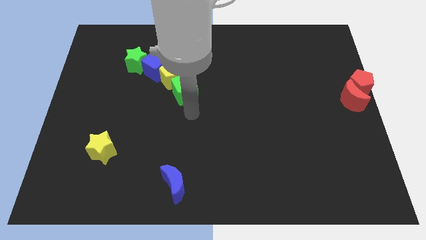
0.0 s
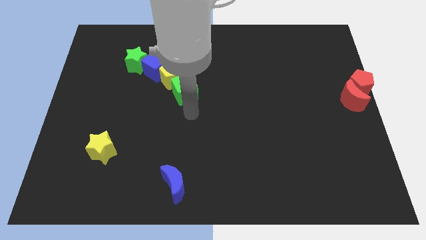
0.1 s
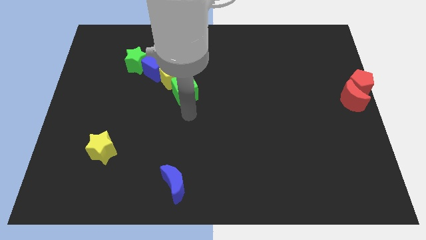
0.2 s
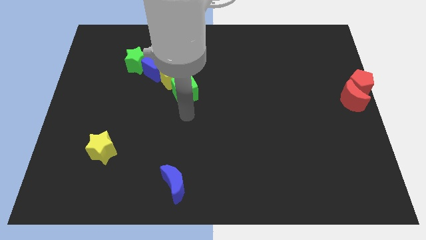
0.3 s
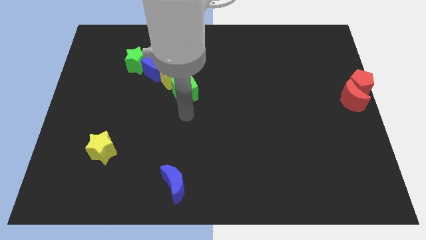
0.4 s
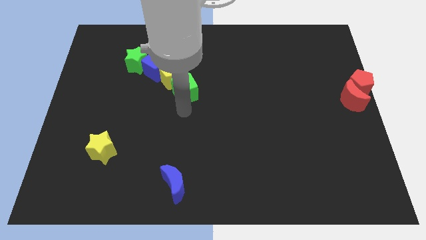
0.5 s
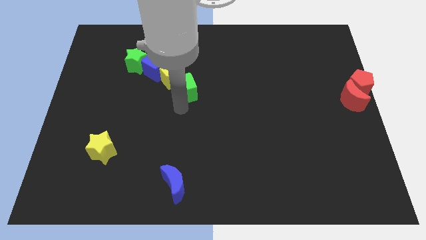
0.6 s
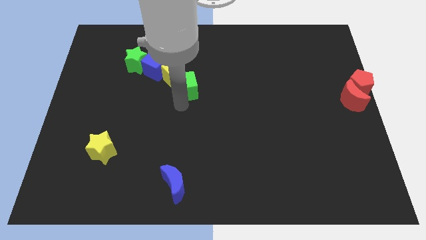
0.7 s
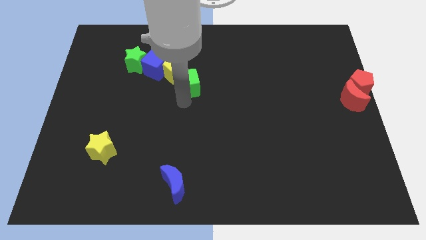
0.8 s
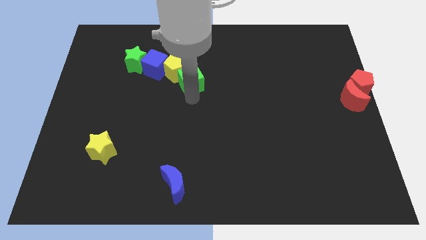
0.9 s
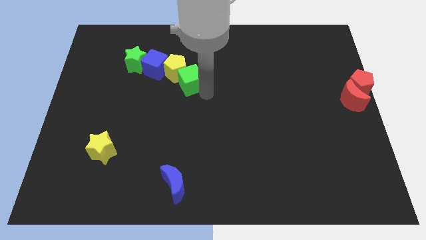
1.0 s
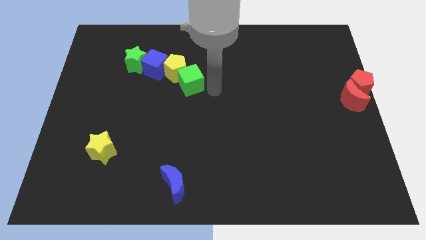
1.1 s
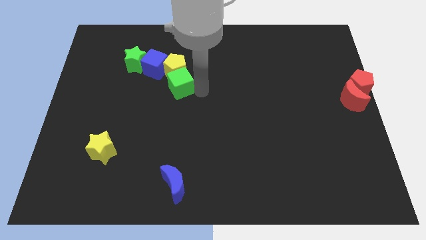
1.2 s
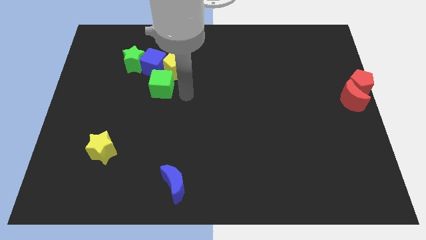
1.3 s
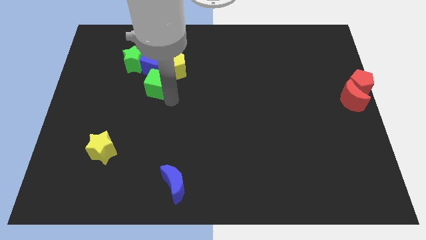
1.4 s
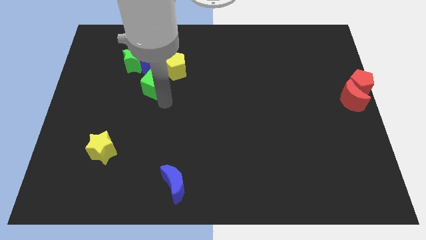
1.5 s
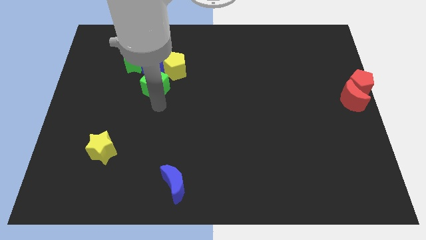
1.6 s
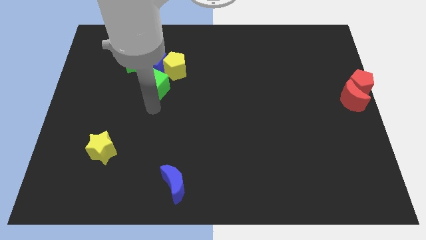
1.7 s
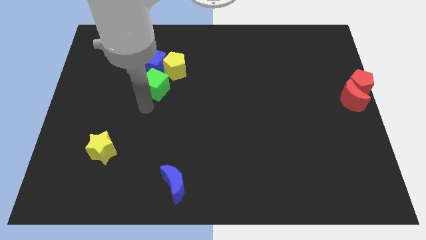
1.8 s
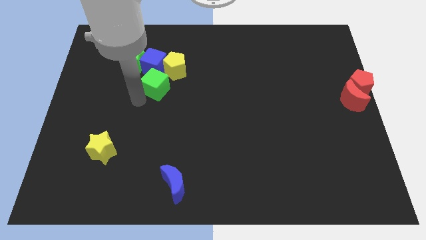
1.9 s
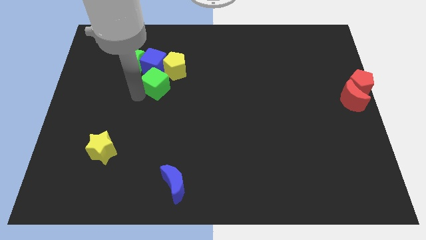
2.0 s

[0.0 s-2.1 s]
move the green cube to the bottom side of the blue cube

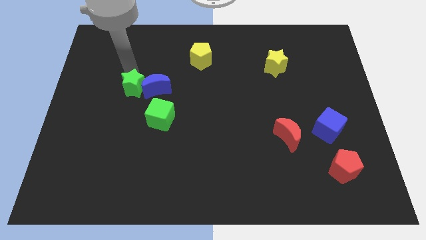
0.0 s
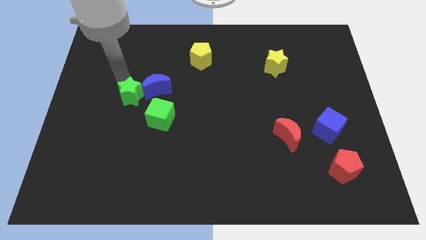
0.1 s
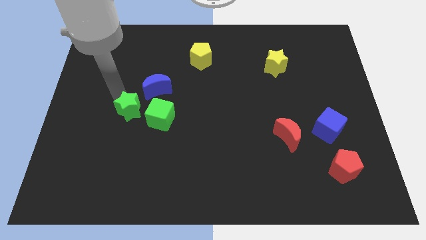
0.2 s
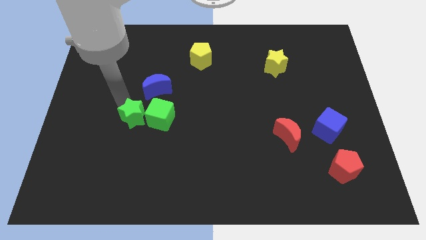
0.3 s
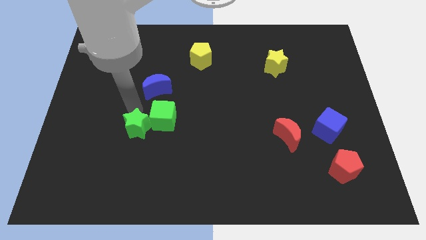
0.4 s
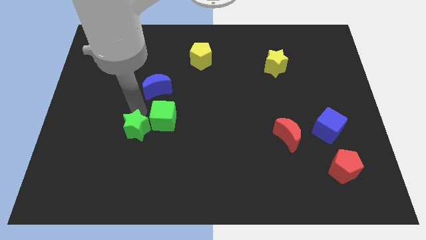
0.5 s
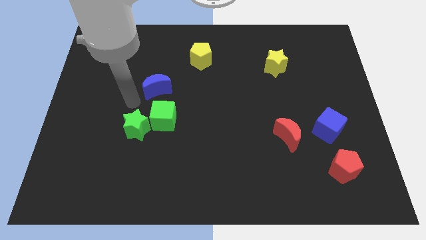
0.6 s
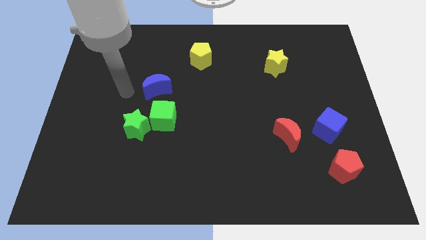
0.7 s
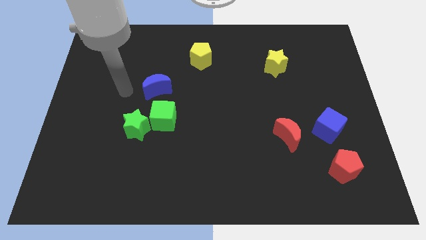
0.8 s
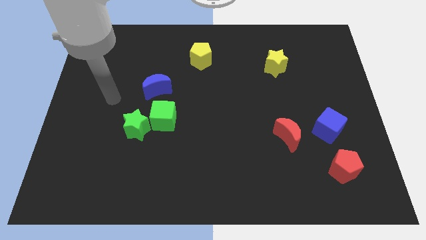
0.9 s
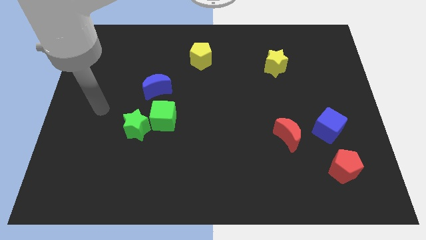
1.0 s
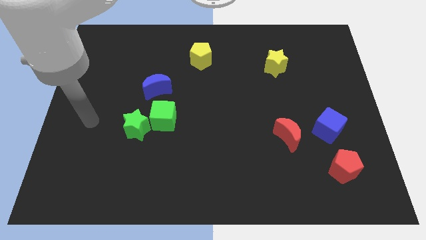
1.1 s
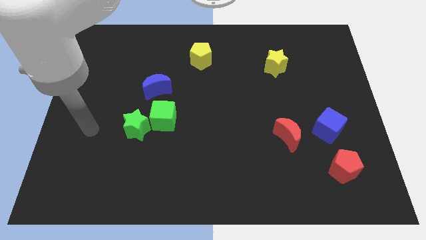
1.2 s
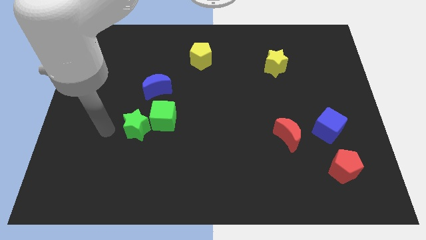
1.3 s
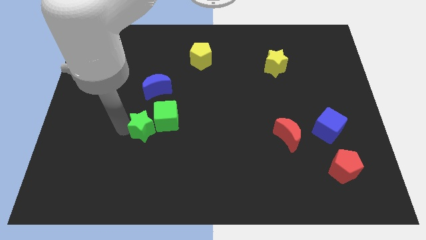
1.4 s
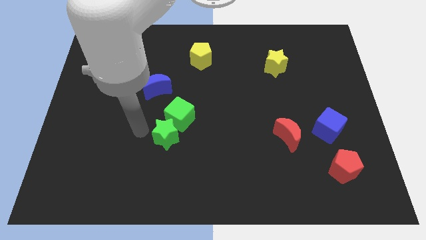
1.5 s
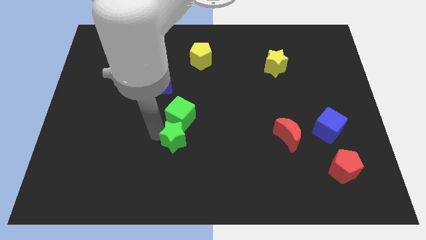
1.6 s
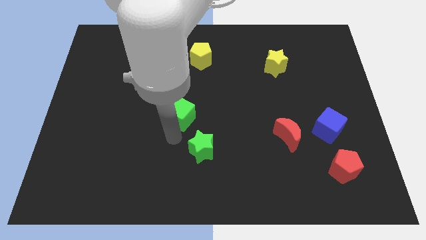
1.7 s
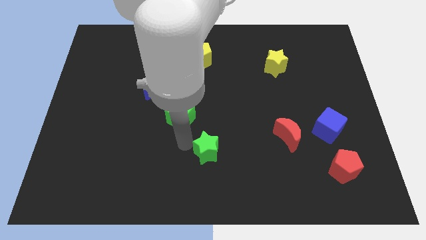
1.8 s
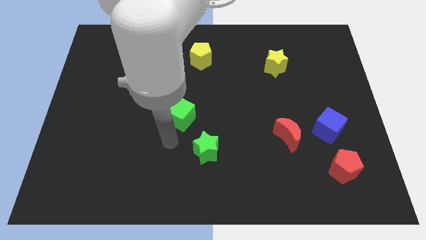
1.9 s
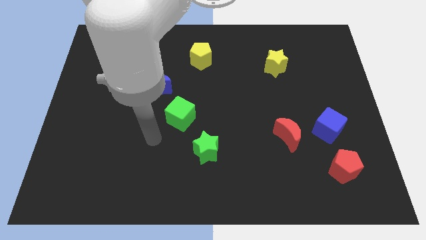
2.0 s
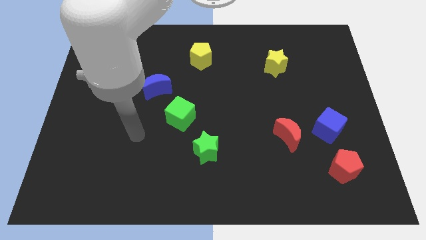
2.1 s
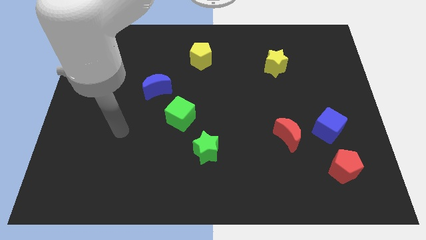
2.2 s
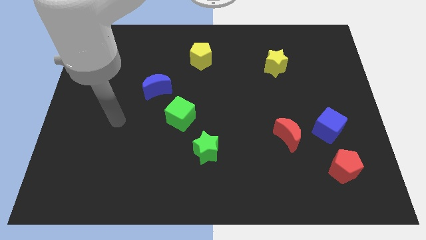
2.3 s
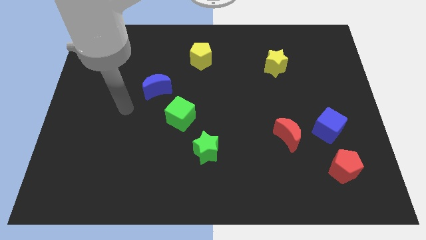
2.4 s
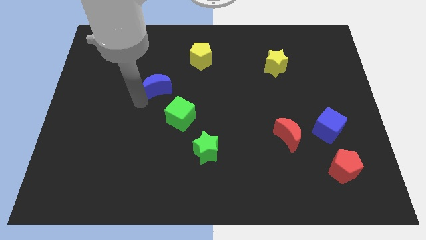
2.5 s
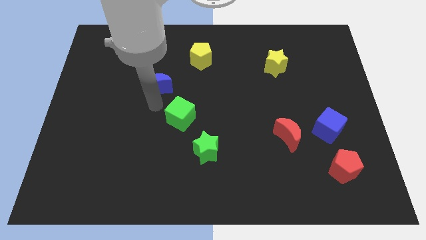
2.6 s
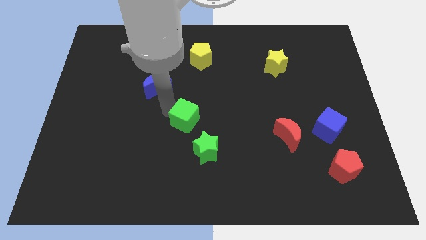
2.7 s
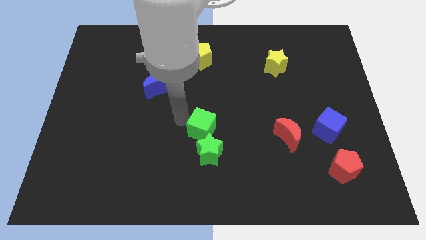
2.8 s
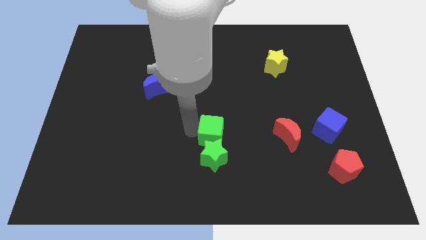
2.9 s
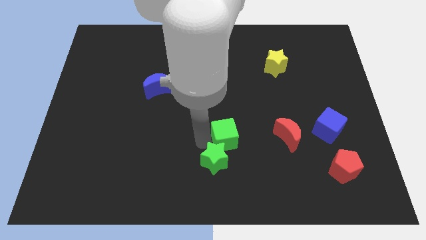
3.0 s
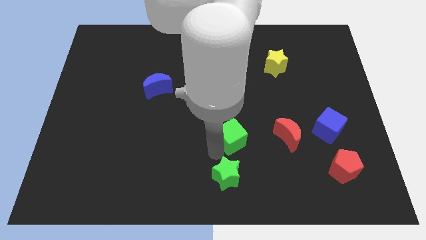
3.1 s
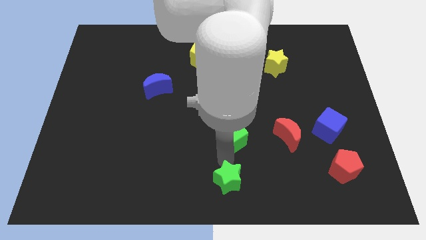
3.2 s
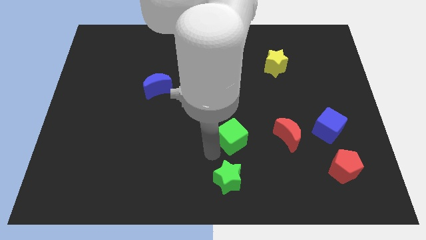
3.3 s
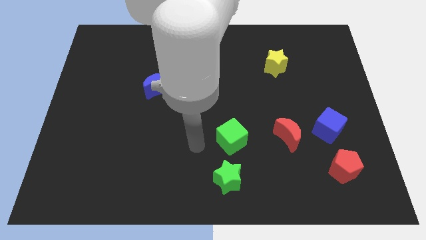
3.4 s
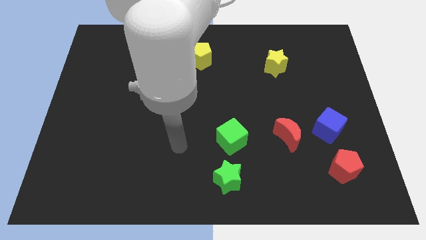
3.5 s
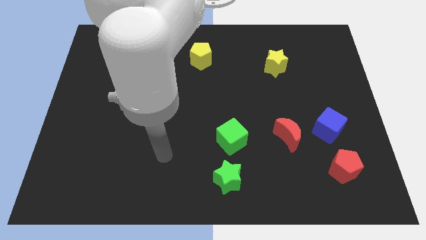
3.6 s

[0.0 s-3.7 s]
place the green star to the left of the red crescent

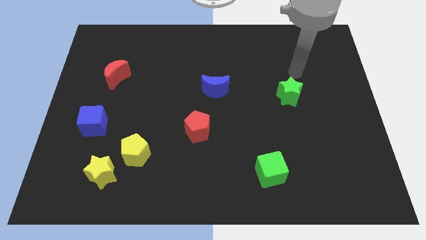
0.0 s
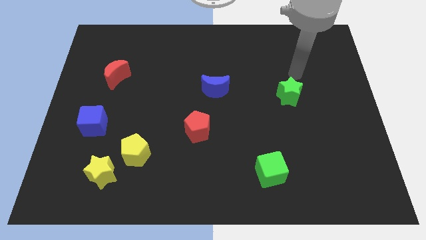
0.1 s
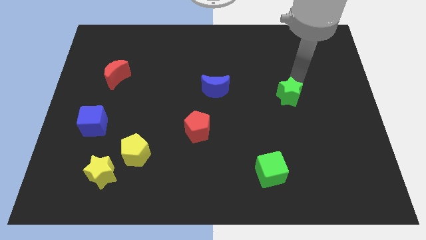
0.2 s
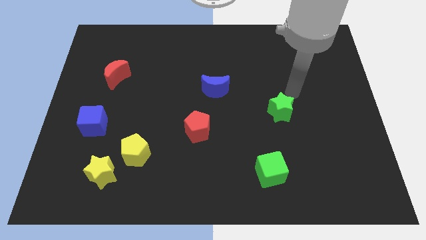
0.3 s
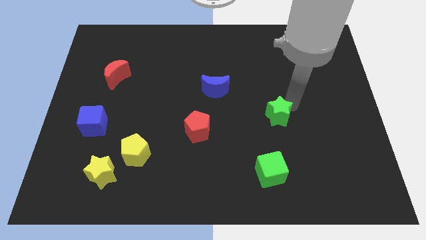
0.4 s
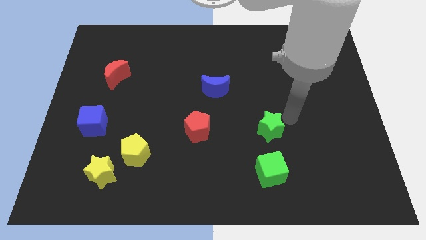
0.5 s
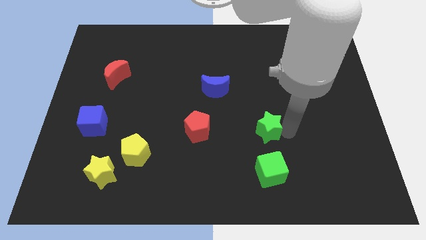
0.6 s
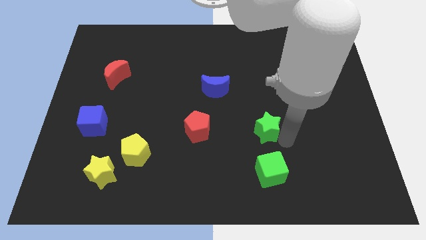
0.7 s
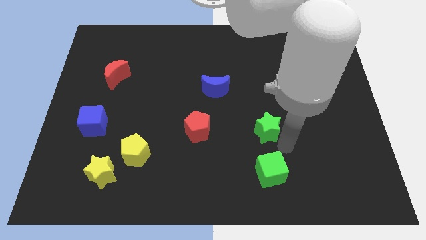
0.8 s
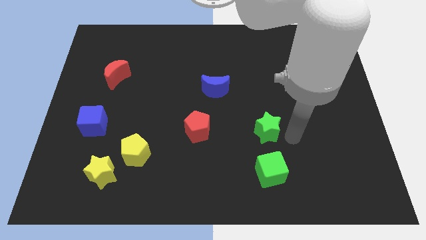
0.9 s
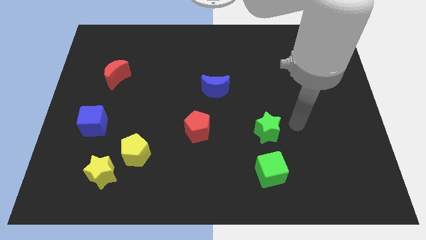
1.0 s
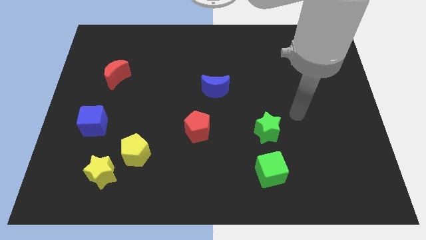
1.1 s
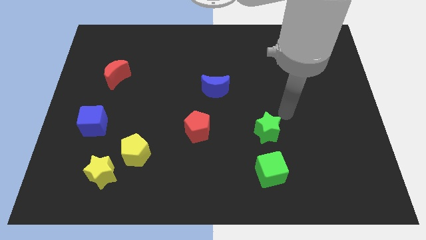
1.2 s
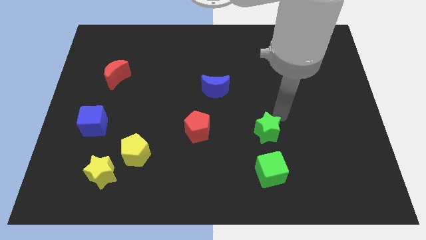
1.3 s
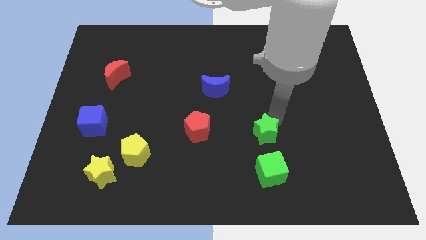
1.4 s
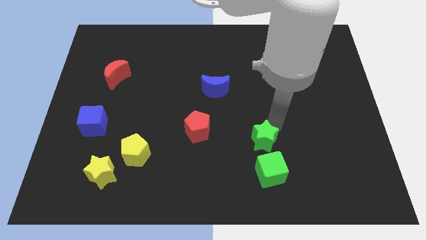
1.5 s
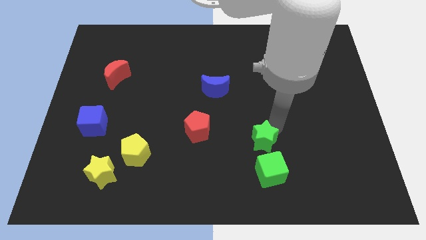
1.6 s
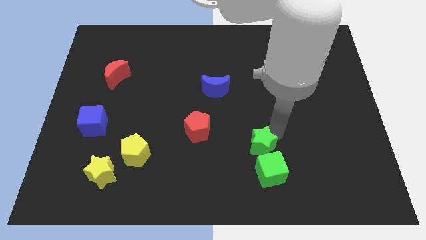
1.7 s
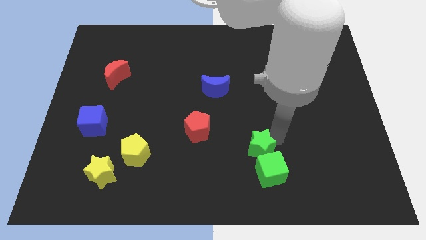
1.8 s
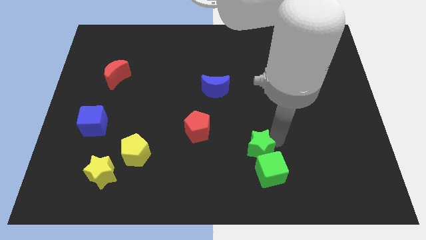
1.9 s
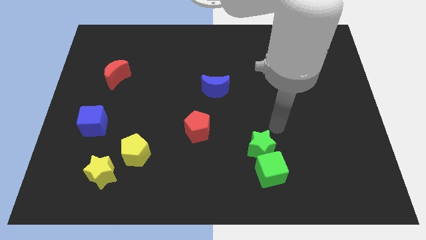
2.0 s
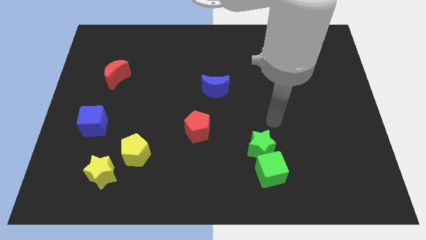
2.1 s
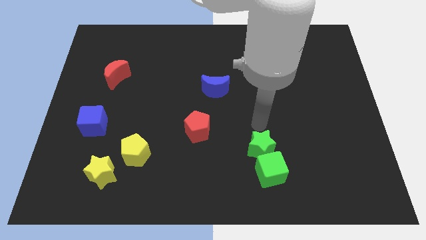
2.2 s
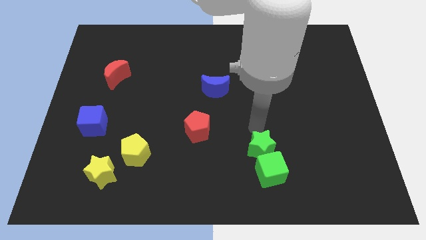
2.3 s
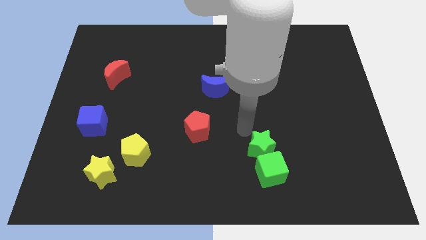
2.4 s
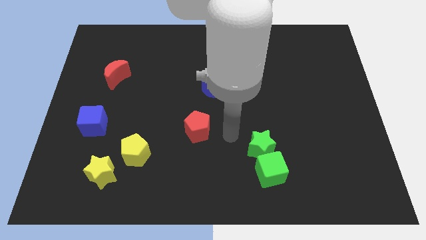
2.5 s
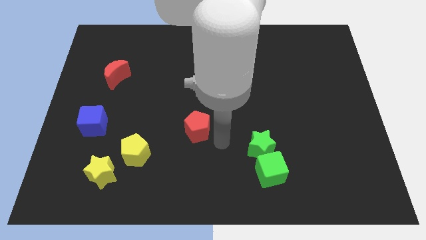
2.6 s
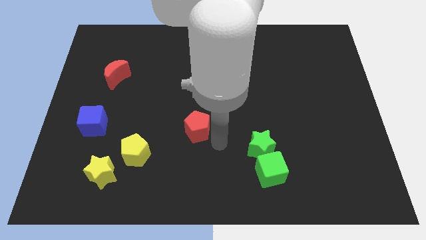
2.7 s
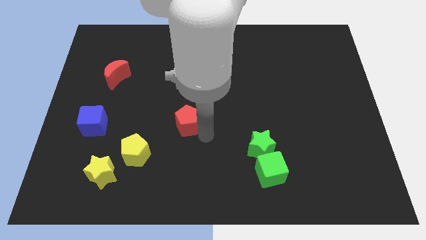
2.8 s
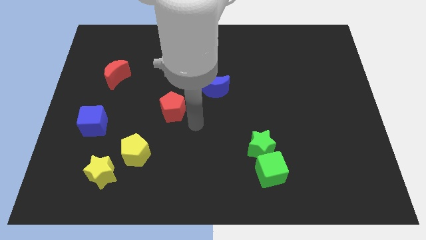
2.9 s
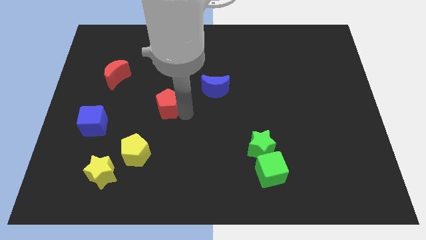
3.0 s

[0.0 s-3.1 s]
move the red pentagon diagonal away from green star

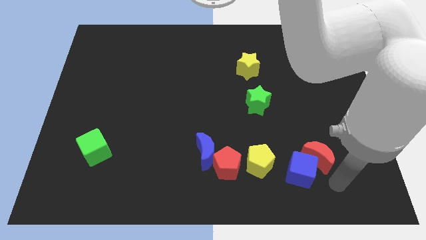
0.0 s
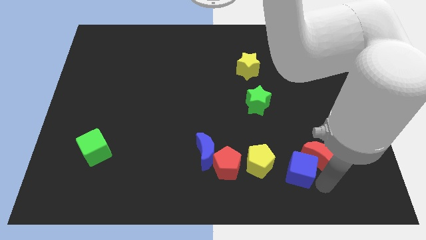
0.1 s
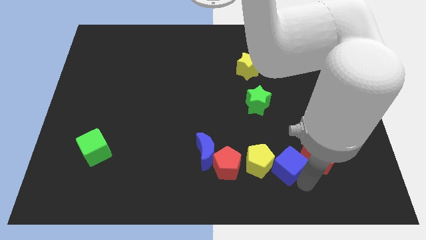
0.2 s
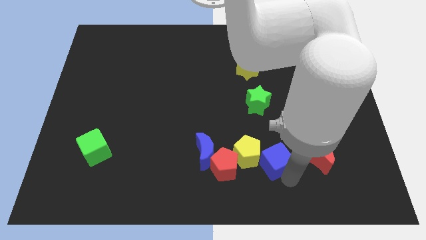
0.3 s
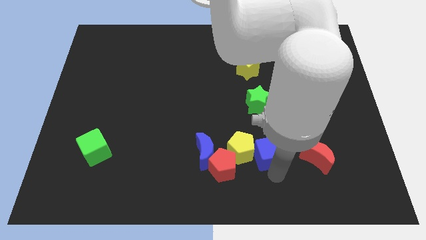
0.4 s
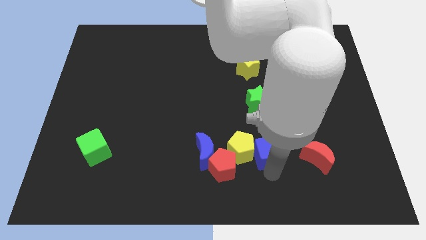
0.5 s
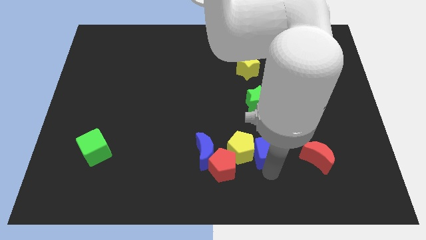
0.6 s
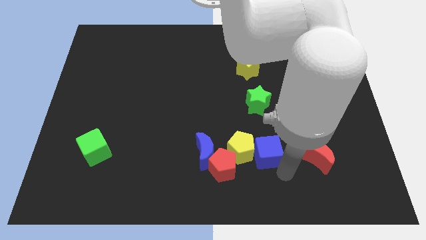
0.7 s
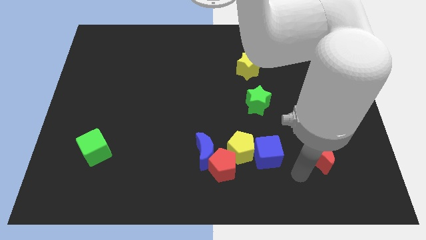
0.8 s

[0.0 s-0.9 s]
push the blue cube into the bottom of the yellow pentagon
